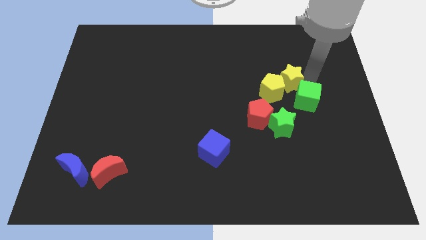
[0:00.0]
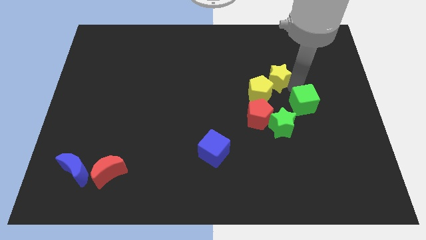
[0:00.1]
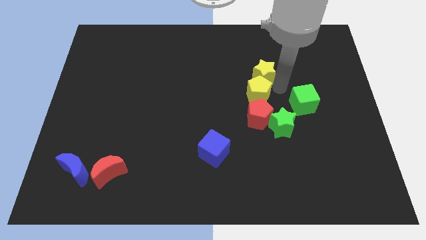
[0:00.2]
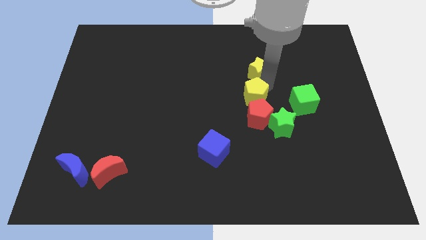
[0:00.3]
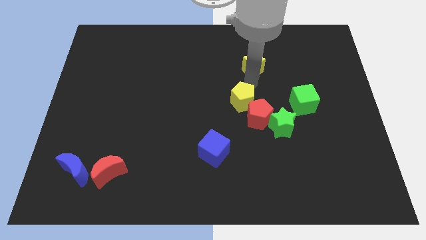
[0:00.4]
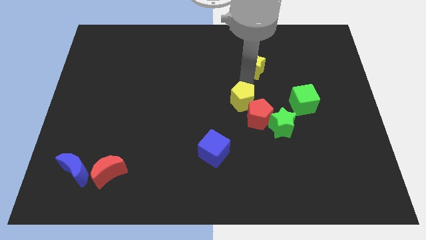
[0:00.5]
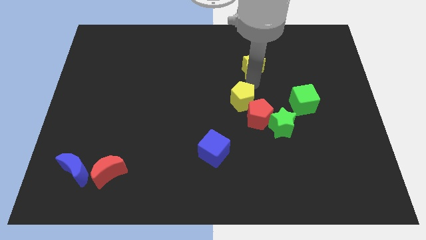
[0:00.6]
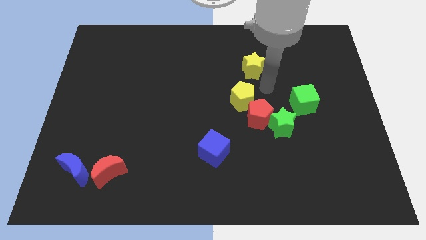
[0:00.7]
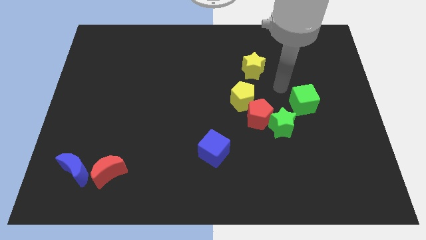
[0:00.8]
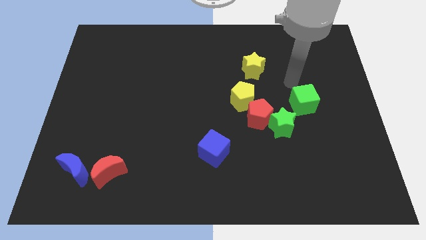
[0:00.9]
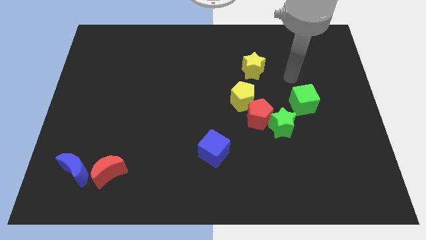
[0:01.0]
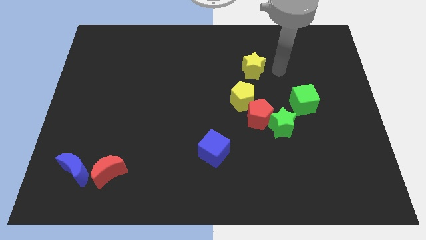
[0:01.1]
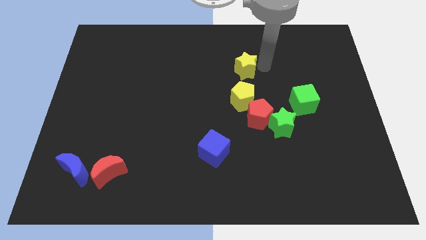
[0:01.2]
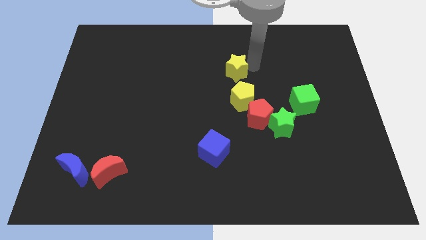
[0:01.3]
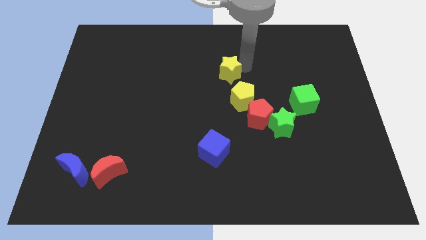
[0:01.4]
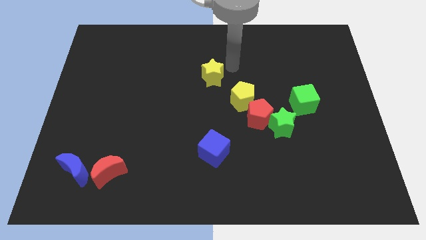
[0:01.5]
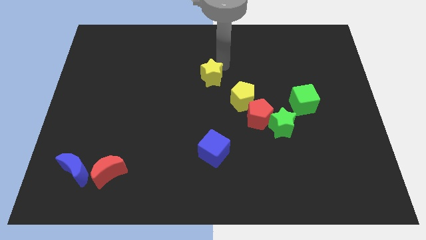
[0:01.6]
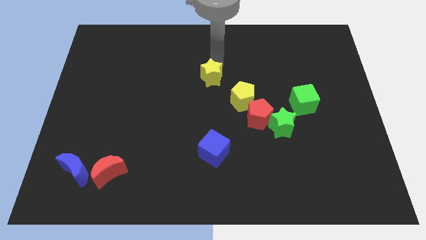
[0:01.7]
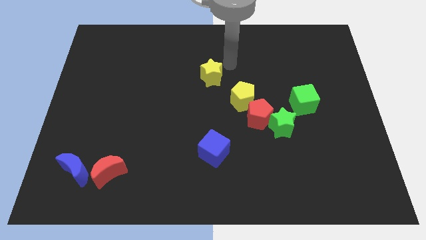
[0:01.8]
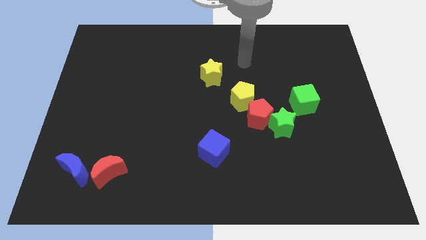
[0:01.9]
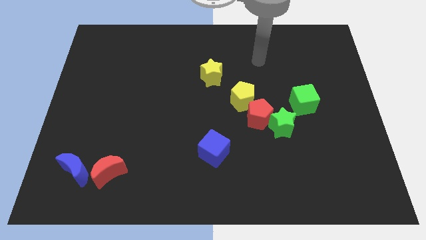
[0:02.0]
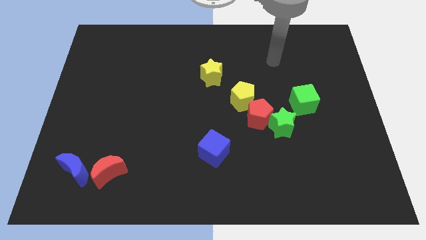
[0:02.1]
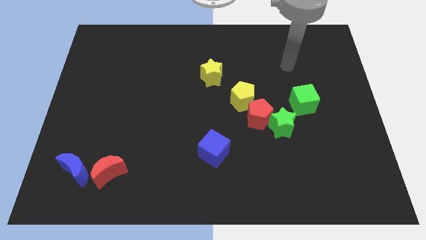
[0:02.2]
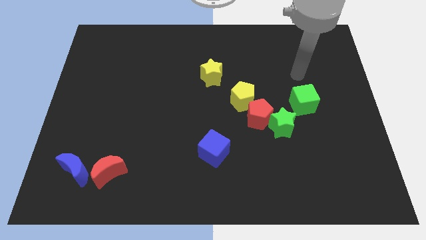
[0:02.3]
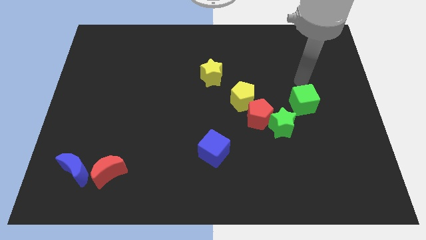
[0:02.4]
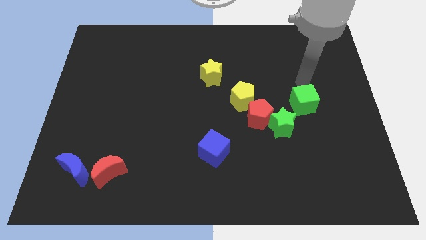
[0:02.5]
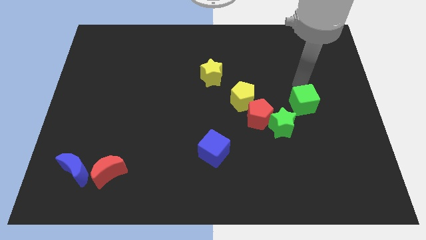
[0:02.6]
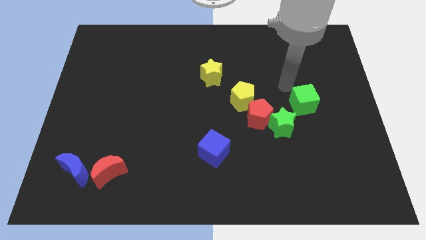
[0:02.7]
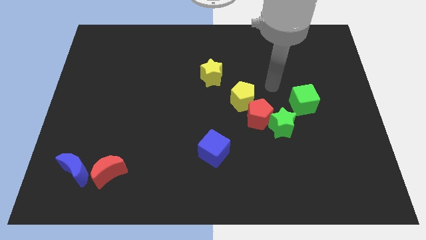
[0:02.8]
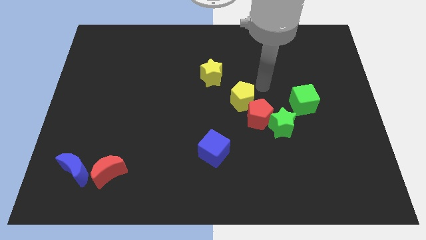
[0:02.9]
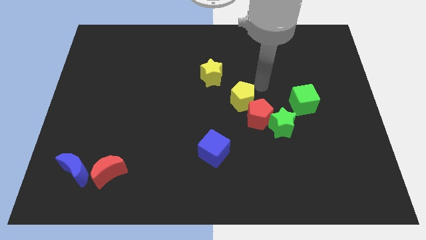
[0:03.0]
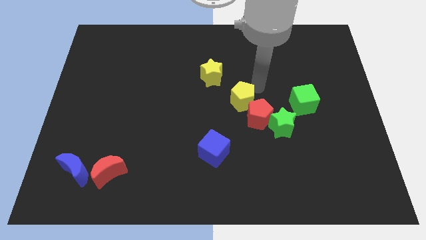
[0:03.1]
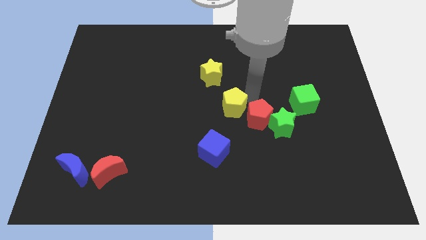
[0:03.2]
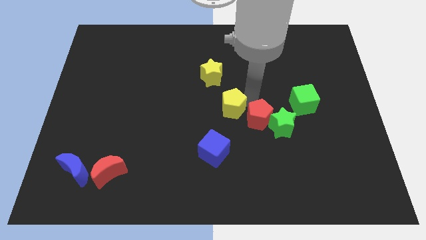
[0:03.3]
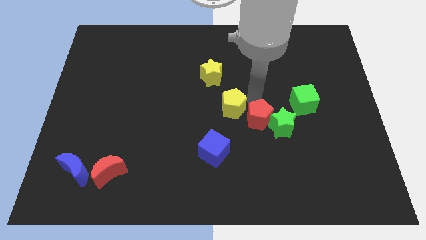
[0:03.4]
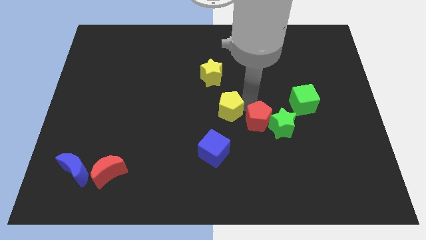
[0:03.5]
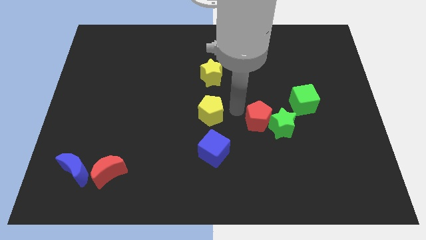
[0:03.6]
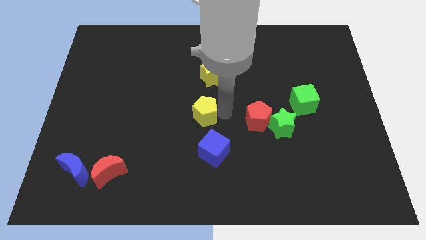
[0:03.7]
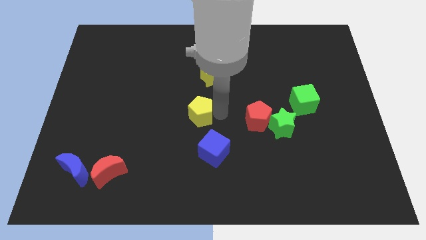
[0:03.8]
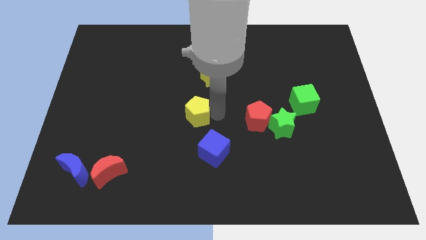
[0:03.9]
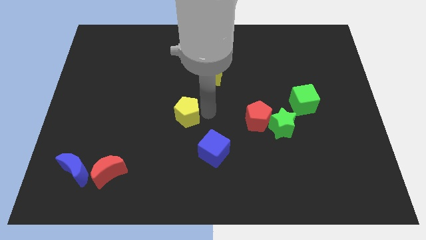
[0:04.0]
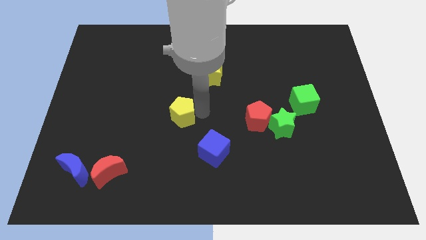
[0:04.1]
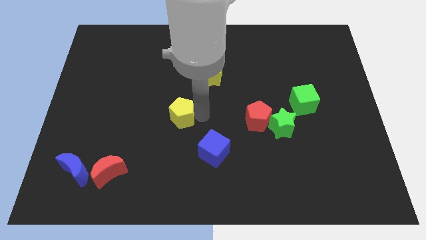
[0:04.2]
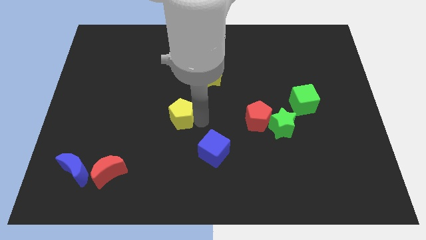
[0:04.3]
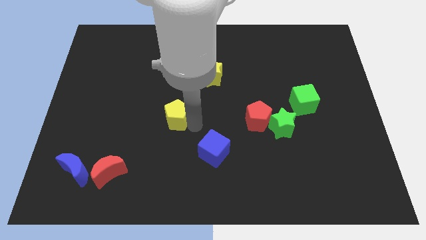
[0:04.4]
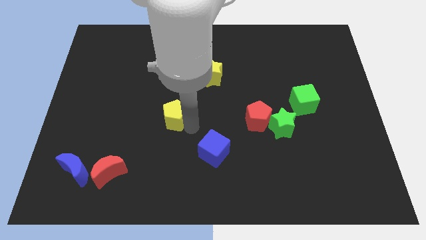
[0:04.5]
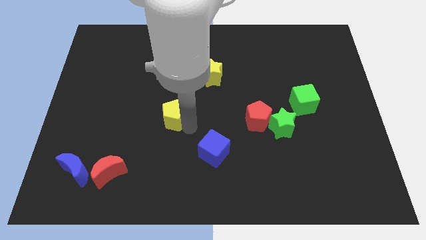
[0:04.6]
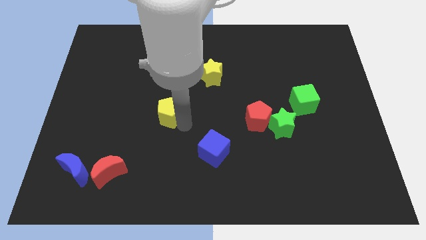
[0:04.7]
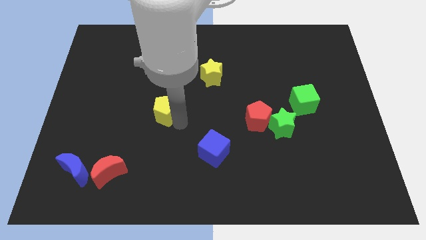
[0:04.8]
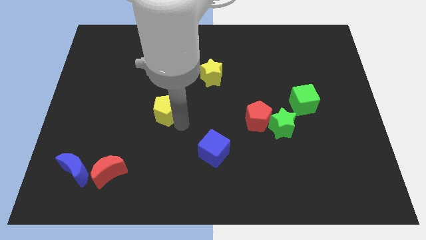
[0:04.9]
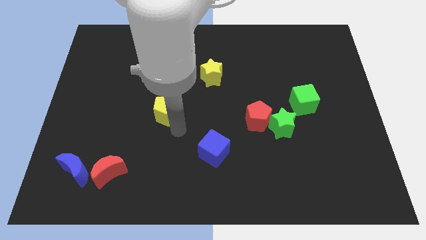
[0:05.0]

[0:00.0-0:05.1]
slide the yellow pentagon horizontally to the left side of the red pentagon

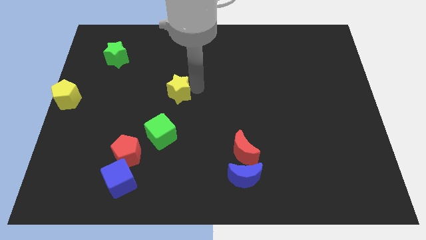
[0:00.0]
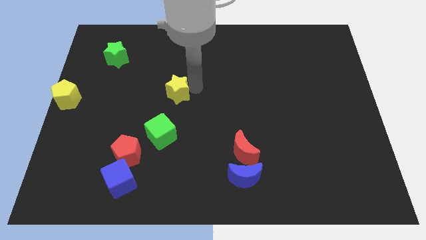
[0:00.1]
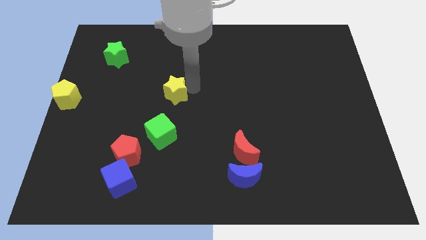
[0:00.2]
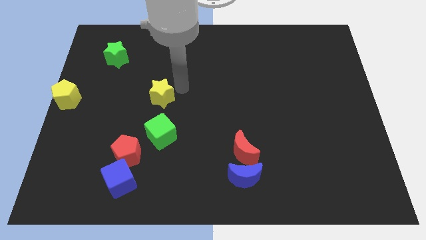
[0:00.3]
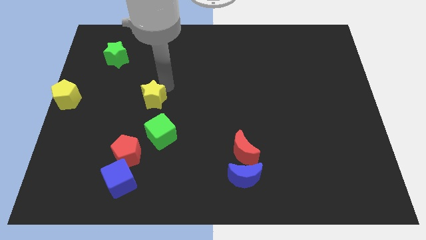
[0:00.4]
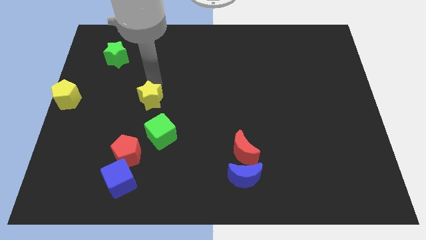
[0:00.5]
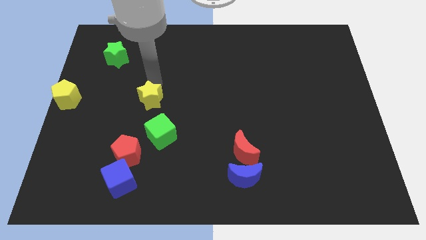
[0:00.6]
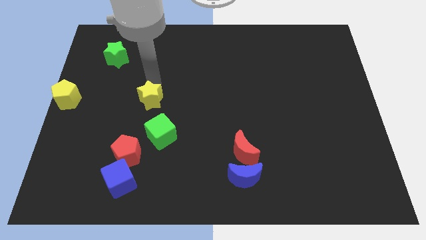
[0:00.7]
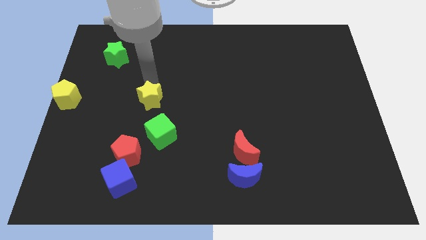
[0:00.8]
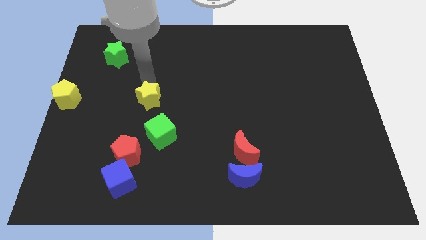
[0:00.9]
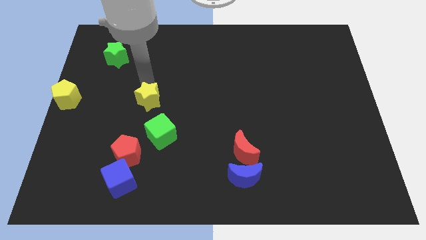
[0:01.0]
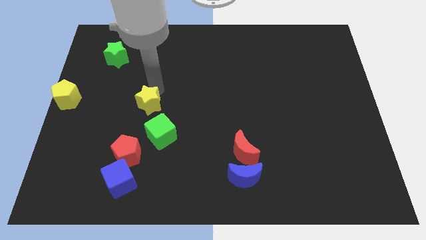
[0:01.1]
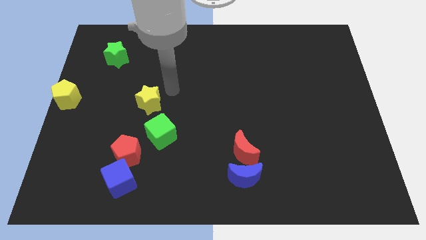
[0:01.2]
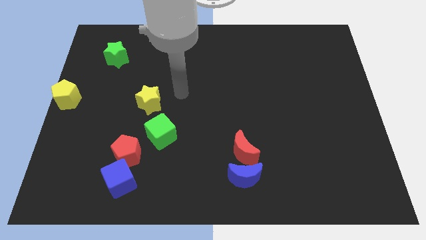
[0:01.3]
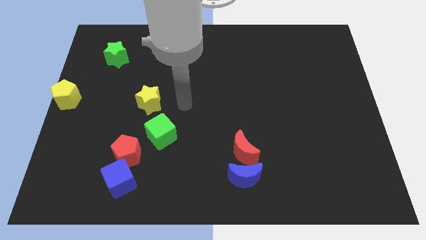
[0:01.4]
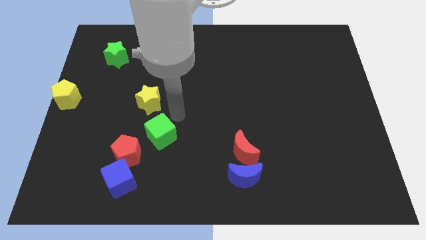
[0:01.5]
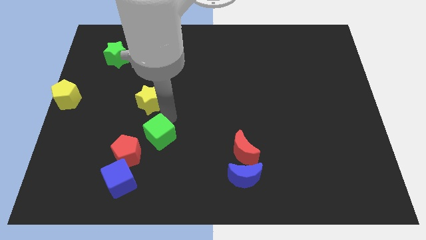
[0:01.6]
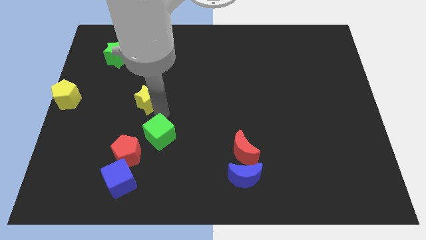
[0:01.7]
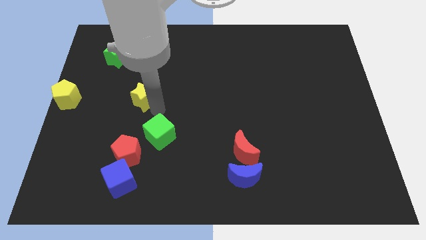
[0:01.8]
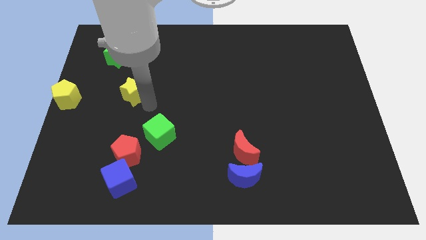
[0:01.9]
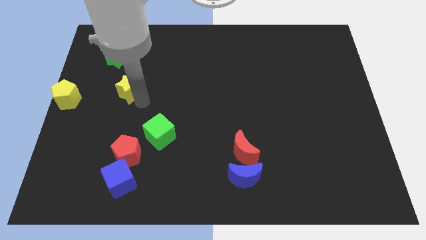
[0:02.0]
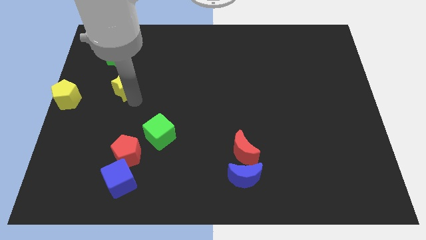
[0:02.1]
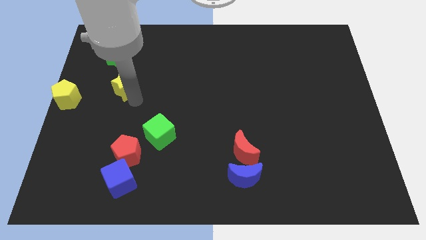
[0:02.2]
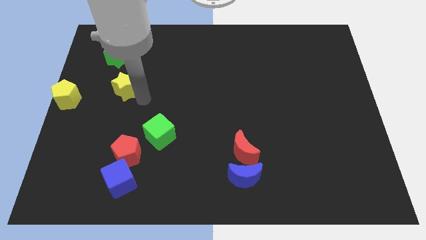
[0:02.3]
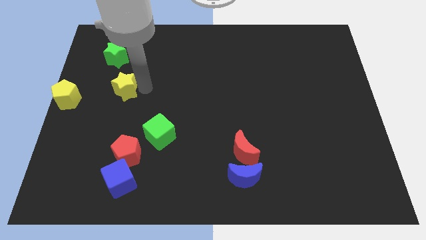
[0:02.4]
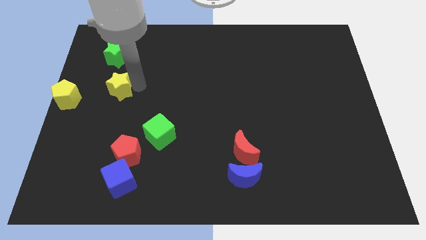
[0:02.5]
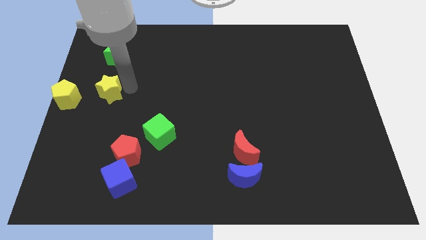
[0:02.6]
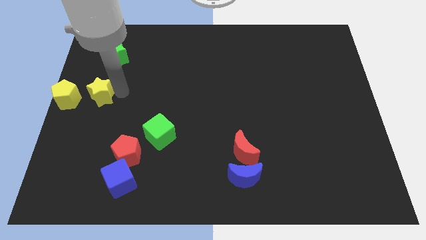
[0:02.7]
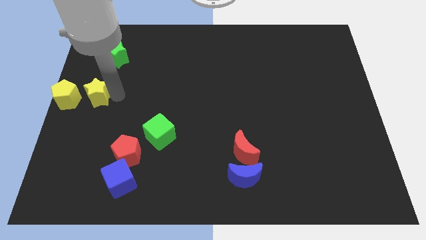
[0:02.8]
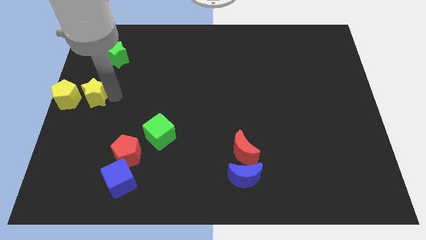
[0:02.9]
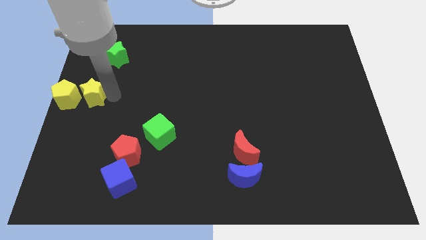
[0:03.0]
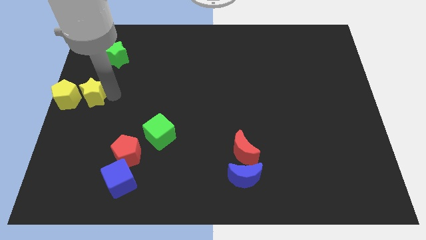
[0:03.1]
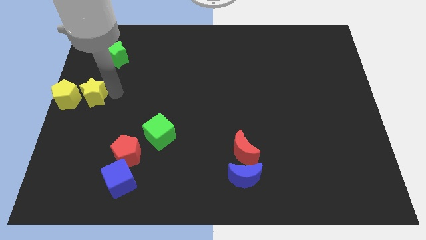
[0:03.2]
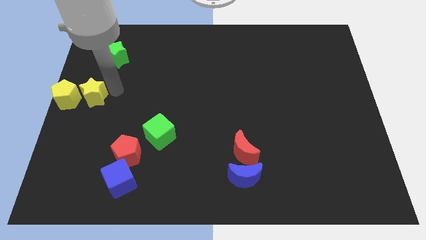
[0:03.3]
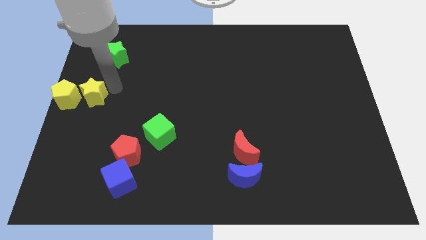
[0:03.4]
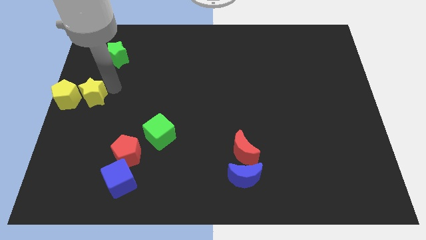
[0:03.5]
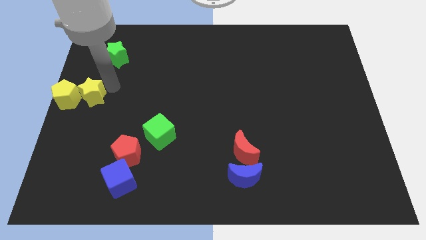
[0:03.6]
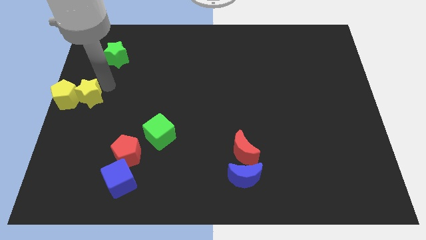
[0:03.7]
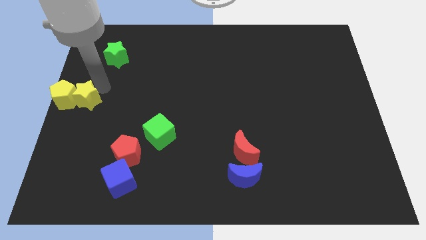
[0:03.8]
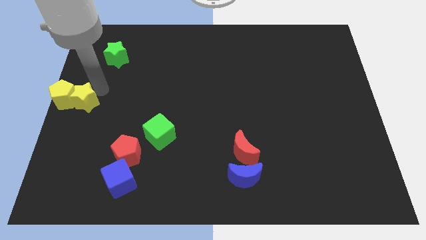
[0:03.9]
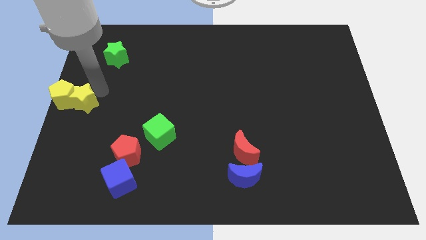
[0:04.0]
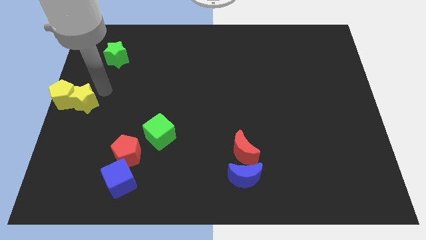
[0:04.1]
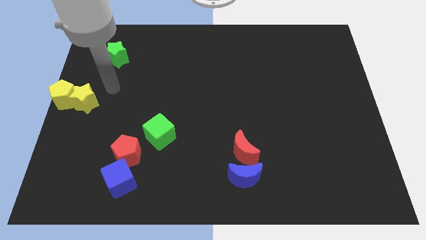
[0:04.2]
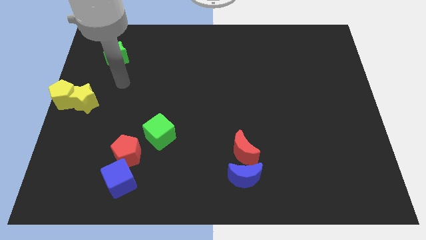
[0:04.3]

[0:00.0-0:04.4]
move the yellow star to the right of the yellow pentagon
